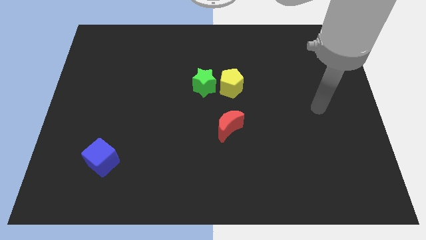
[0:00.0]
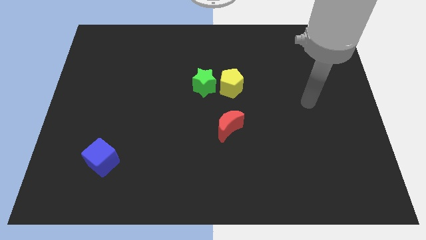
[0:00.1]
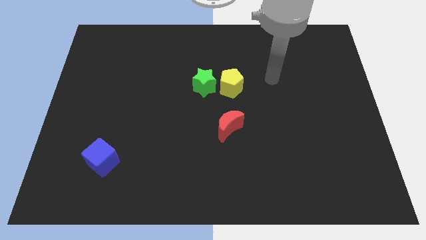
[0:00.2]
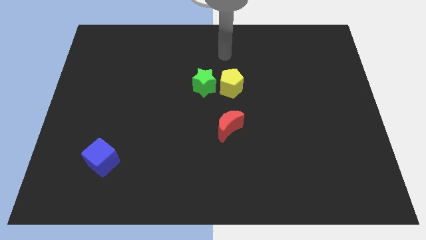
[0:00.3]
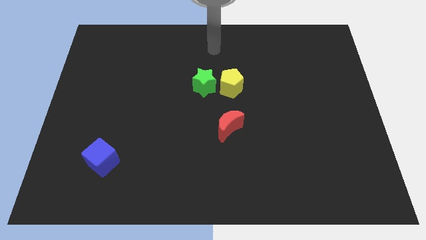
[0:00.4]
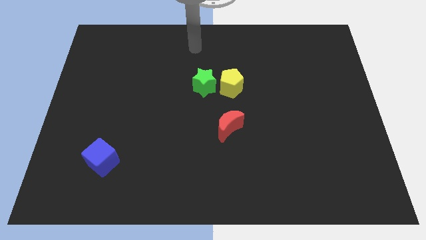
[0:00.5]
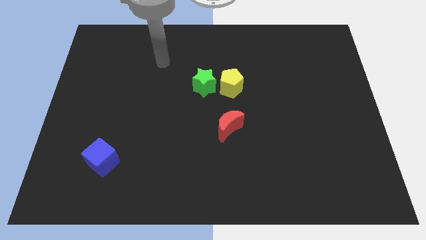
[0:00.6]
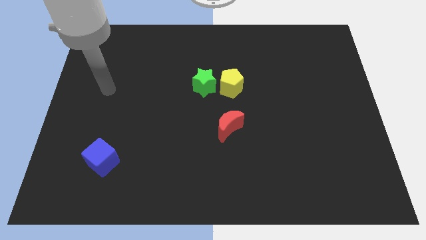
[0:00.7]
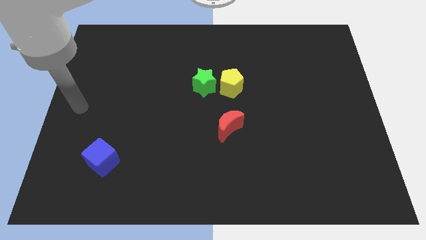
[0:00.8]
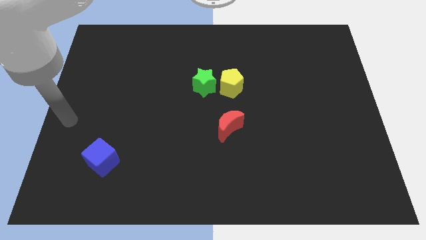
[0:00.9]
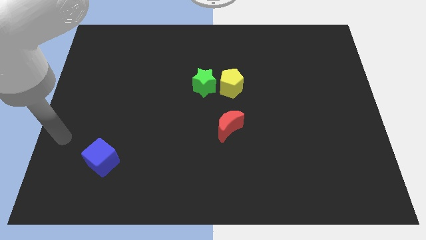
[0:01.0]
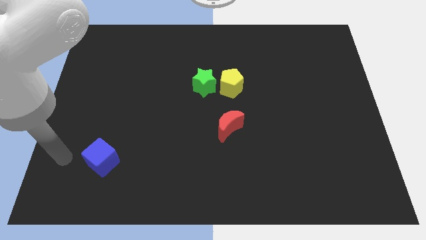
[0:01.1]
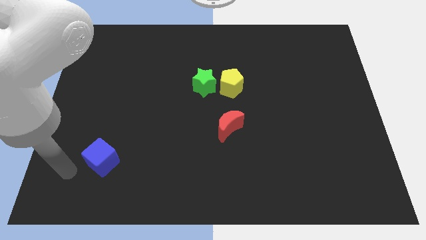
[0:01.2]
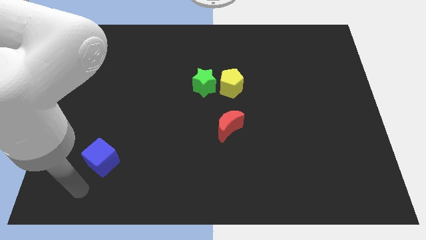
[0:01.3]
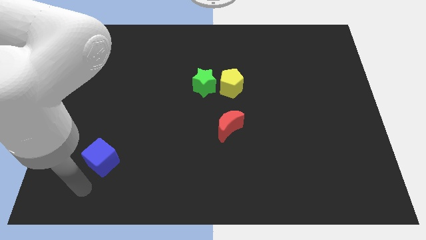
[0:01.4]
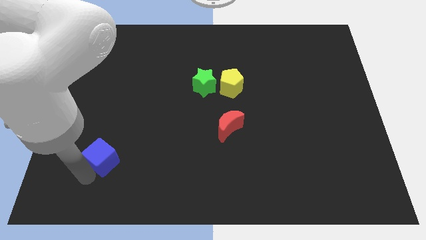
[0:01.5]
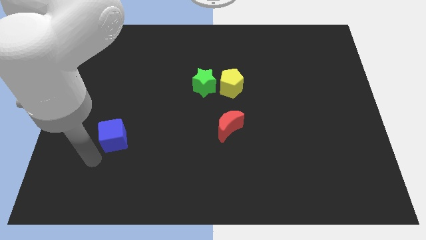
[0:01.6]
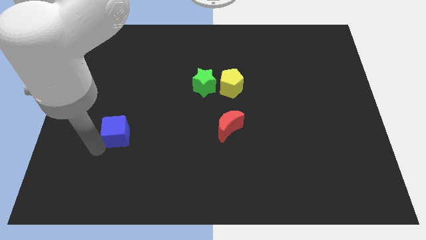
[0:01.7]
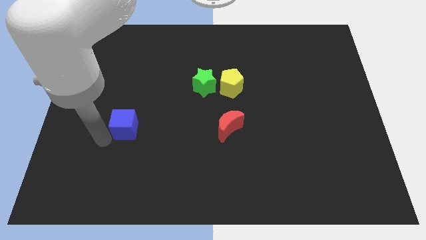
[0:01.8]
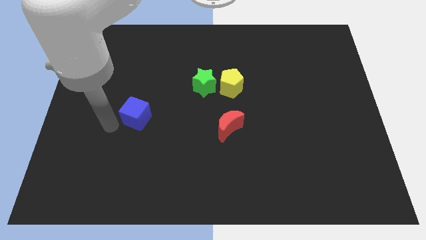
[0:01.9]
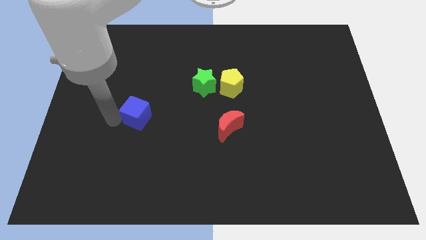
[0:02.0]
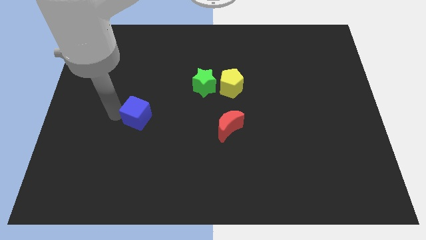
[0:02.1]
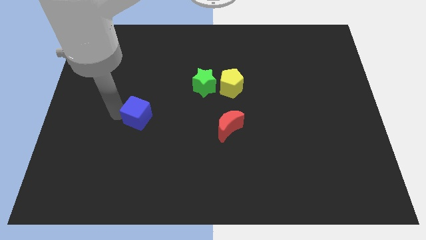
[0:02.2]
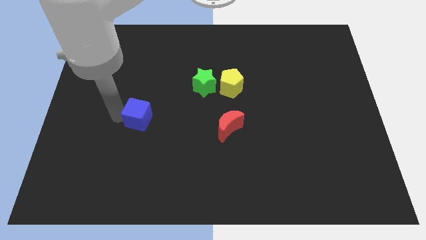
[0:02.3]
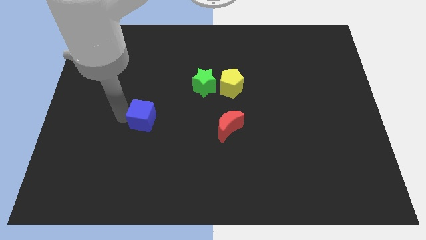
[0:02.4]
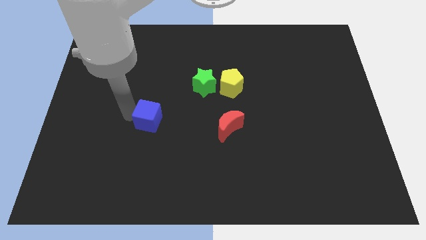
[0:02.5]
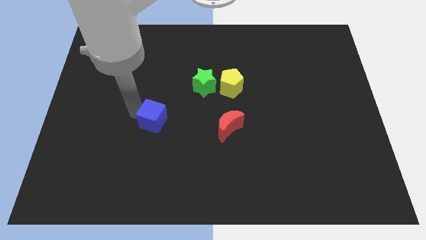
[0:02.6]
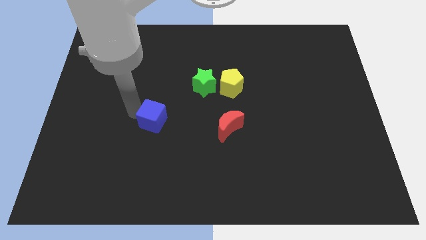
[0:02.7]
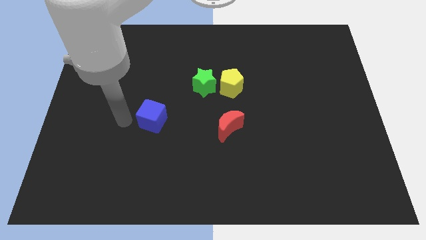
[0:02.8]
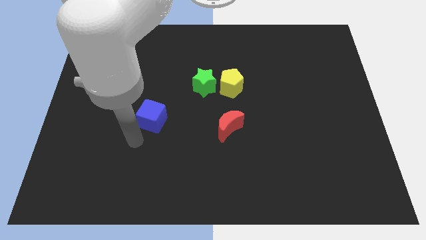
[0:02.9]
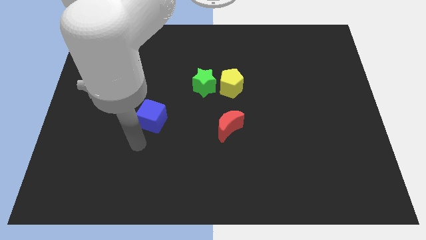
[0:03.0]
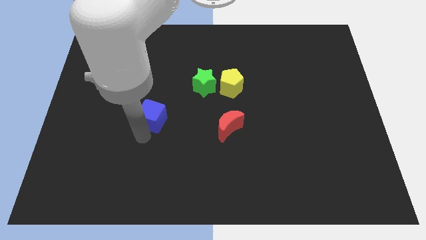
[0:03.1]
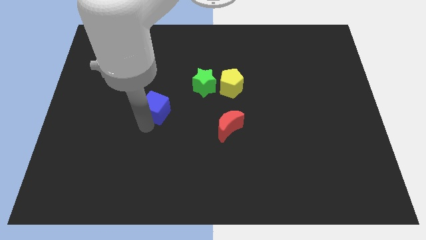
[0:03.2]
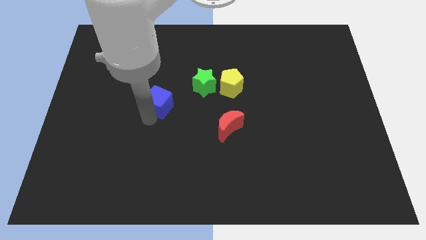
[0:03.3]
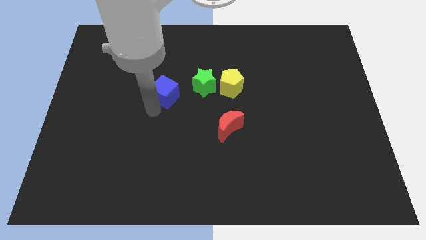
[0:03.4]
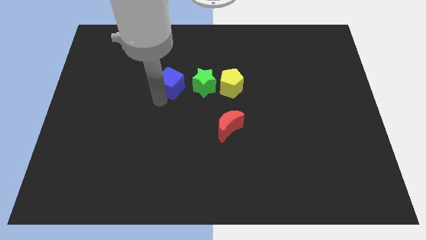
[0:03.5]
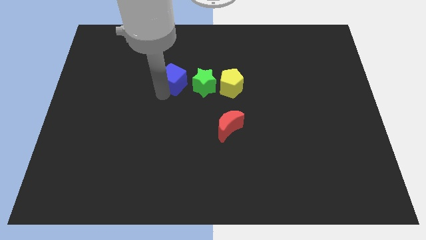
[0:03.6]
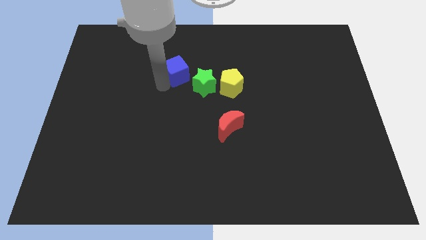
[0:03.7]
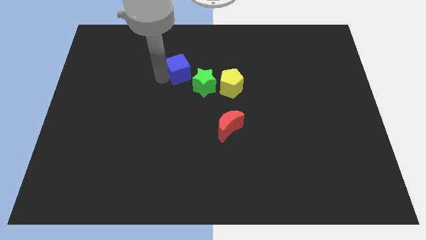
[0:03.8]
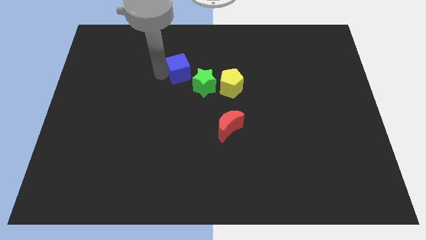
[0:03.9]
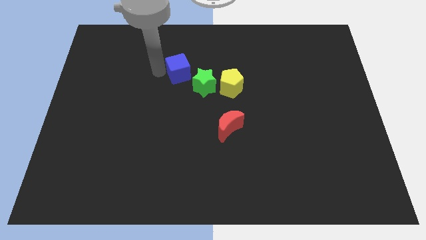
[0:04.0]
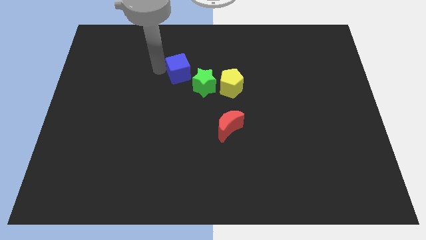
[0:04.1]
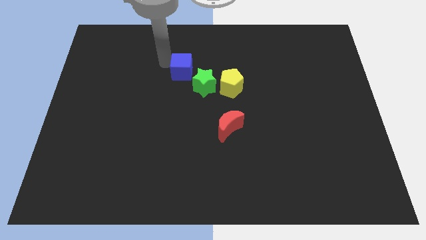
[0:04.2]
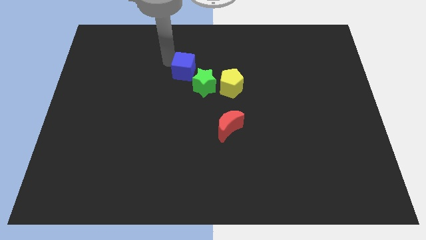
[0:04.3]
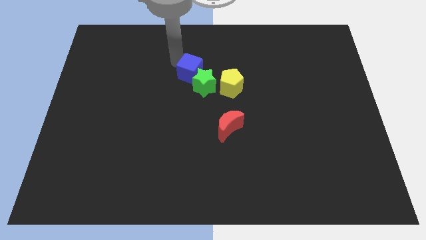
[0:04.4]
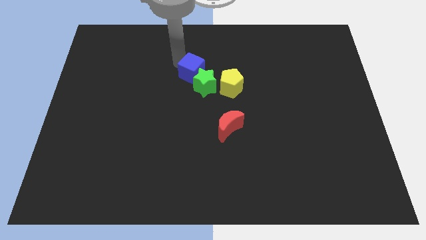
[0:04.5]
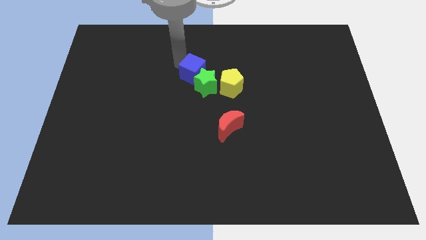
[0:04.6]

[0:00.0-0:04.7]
slide the blue cube to the green block

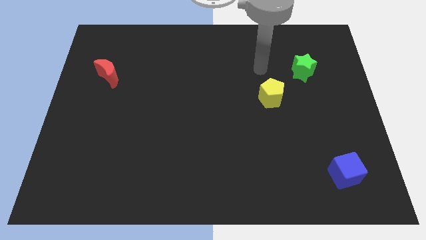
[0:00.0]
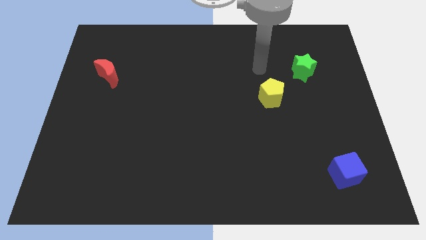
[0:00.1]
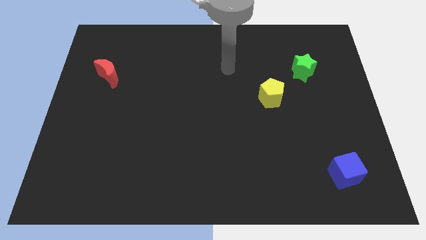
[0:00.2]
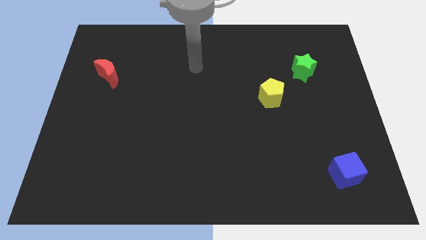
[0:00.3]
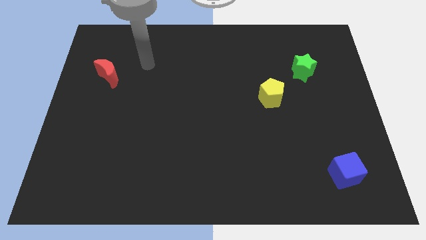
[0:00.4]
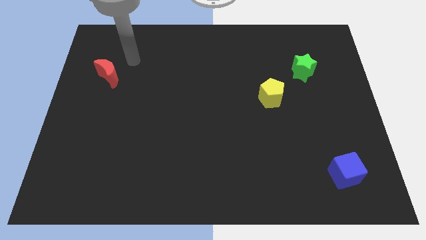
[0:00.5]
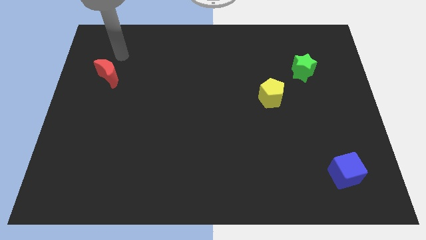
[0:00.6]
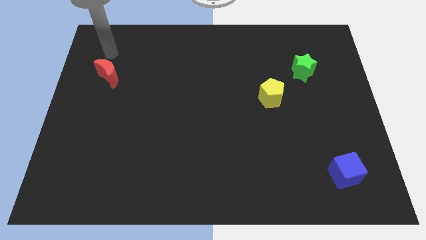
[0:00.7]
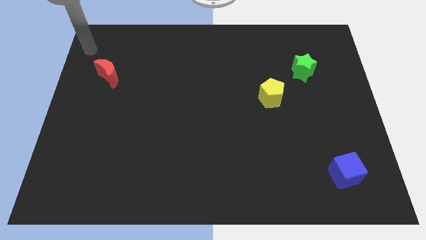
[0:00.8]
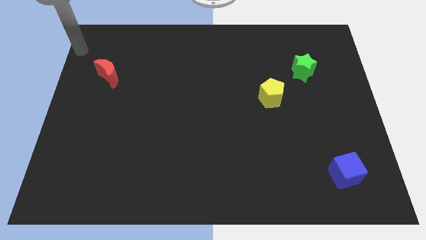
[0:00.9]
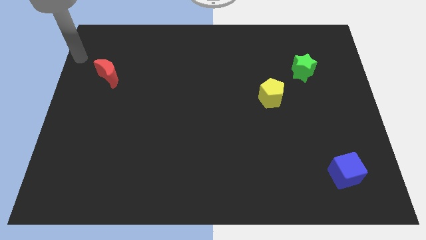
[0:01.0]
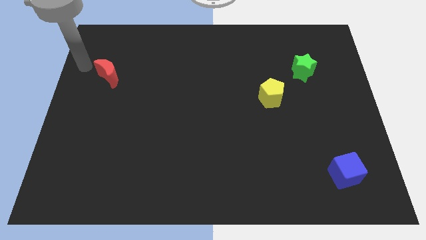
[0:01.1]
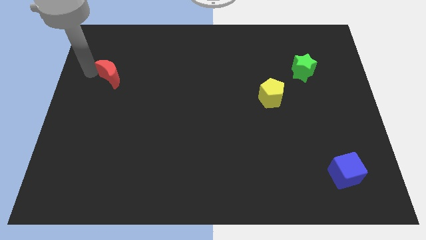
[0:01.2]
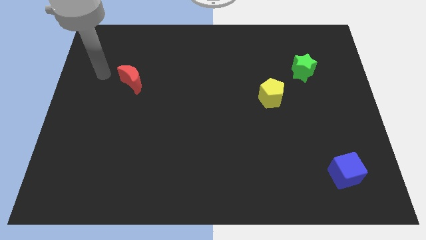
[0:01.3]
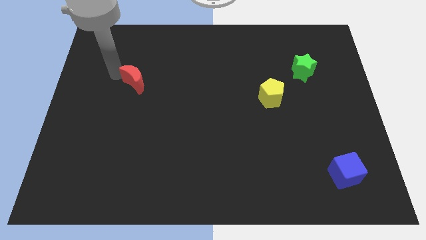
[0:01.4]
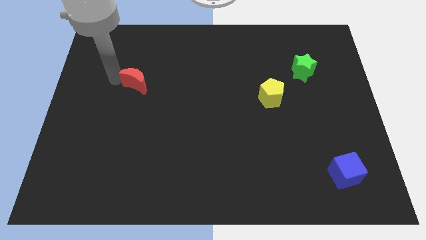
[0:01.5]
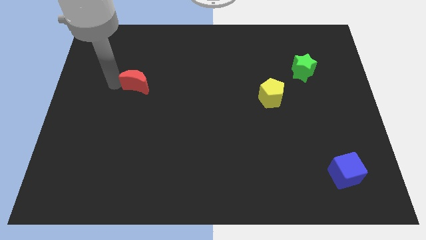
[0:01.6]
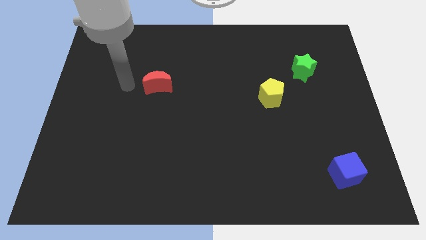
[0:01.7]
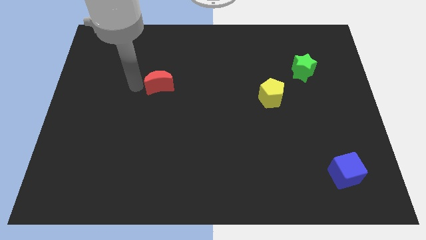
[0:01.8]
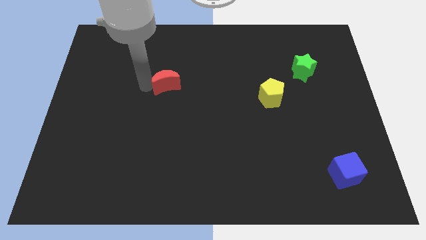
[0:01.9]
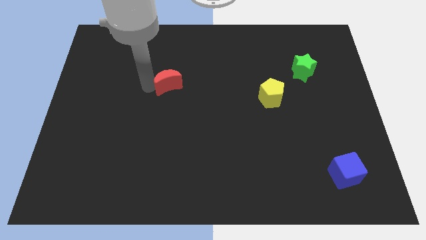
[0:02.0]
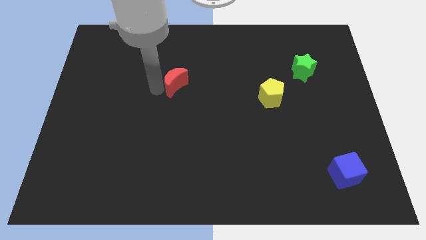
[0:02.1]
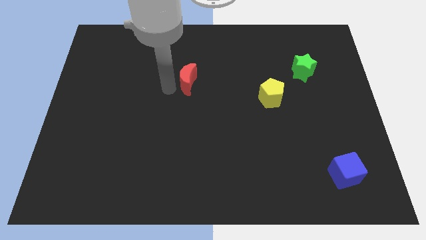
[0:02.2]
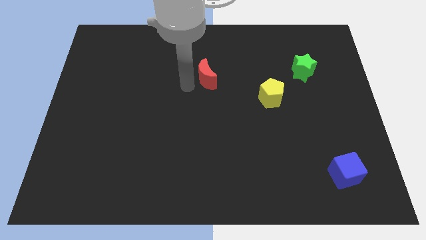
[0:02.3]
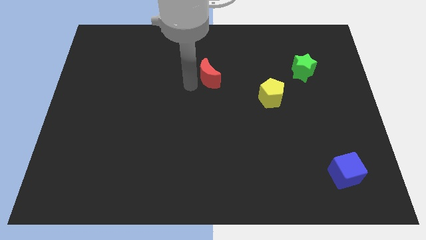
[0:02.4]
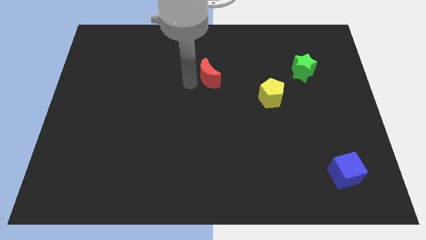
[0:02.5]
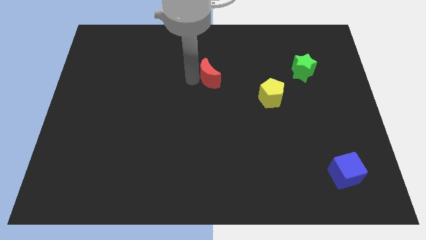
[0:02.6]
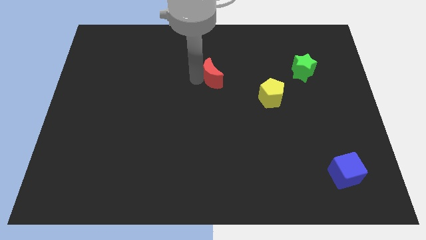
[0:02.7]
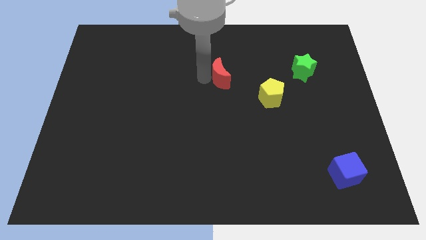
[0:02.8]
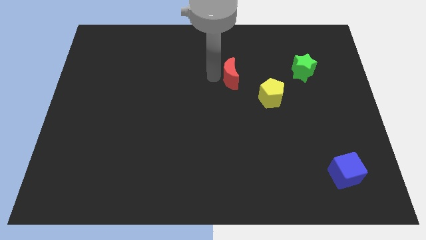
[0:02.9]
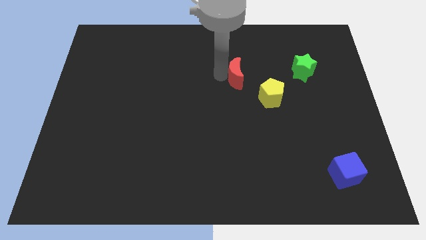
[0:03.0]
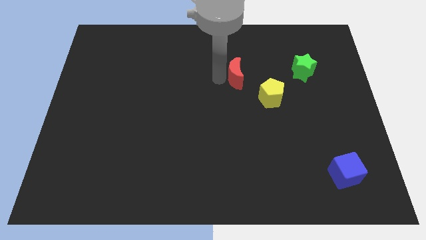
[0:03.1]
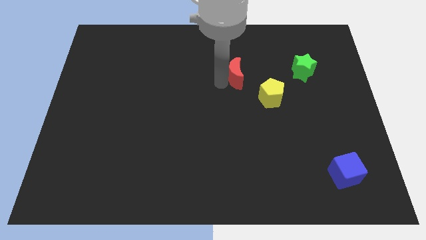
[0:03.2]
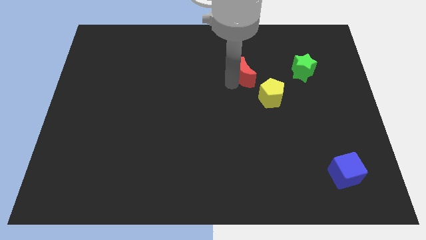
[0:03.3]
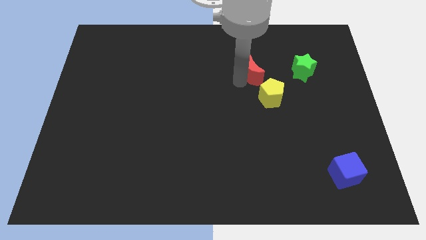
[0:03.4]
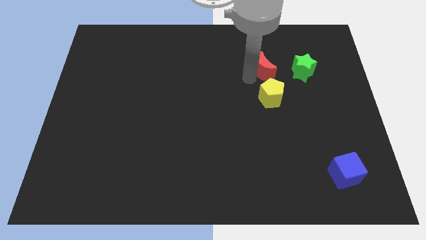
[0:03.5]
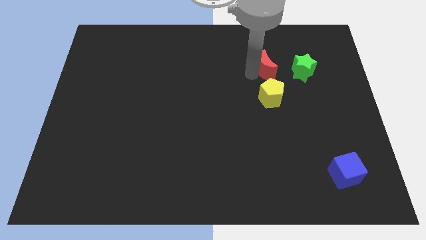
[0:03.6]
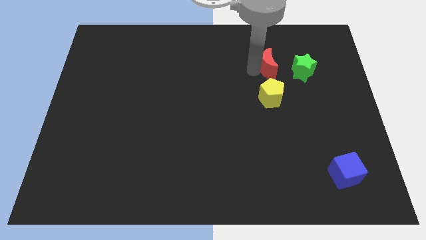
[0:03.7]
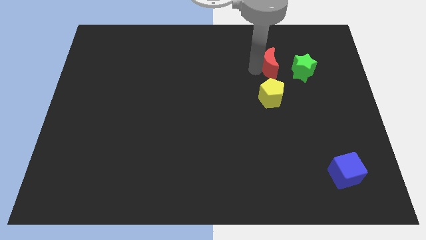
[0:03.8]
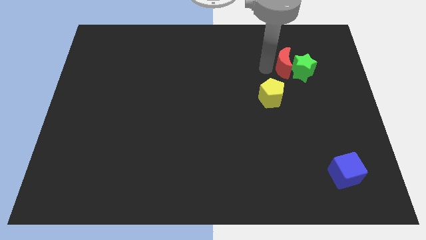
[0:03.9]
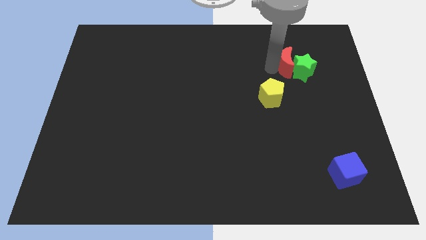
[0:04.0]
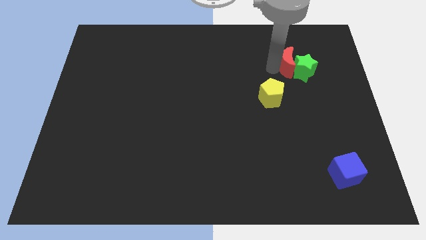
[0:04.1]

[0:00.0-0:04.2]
move the red moon close to the green block
